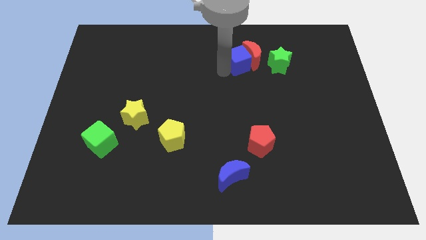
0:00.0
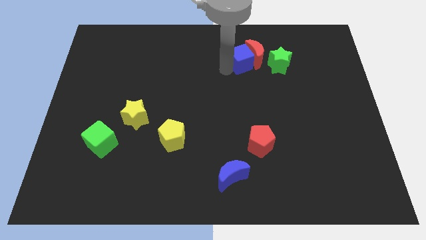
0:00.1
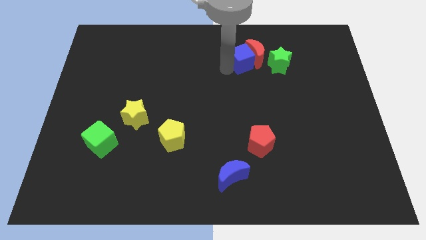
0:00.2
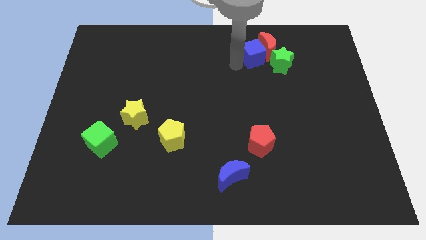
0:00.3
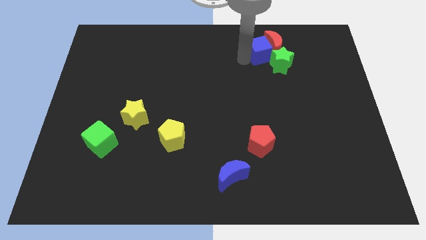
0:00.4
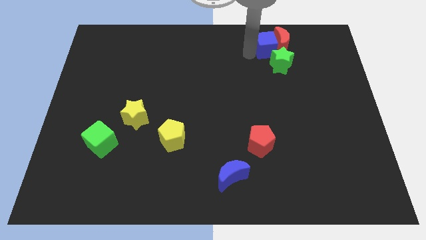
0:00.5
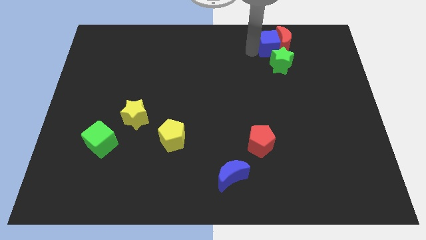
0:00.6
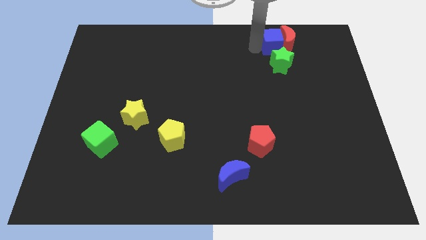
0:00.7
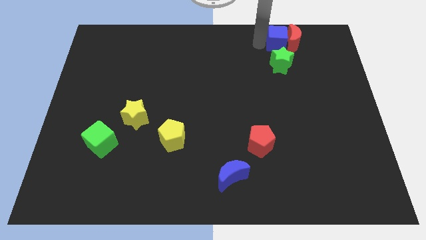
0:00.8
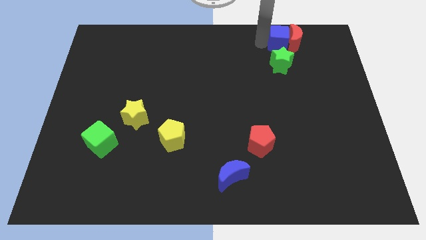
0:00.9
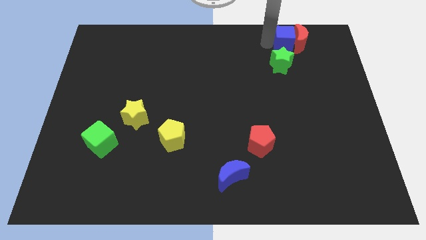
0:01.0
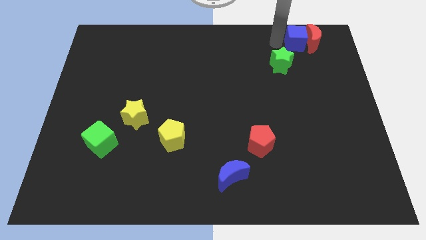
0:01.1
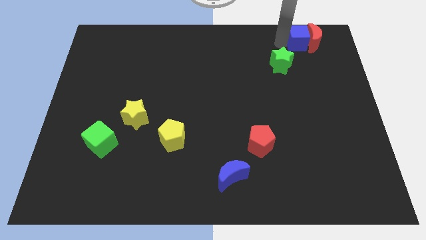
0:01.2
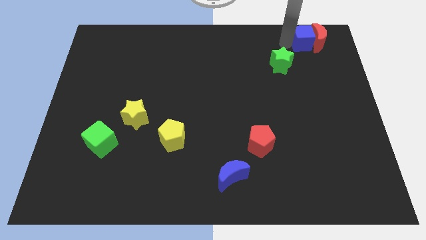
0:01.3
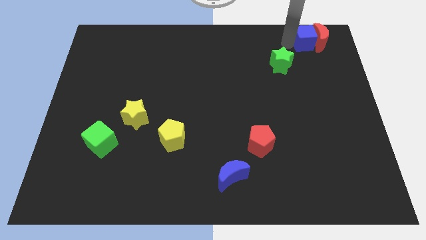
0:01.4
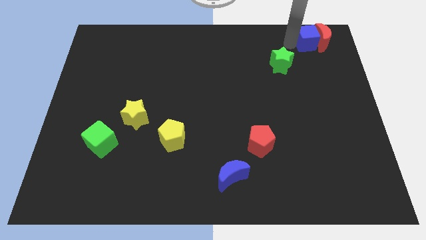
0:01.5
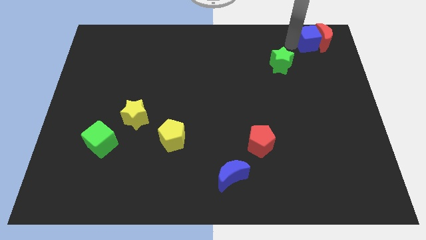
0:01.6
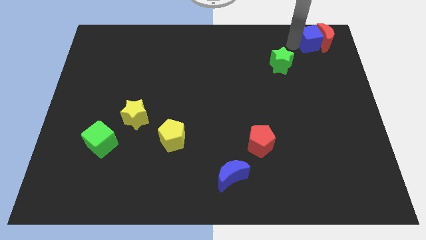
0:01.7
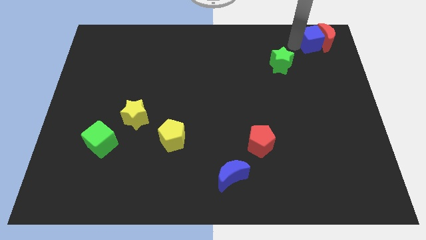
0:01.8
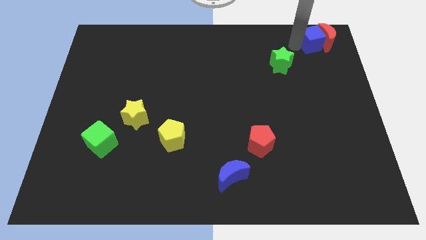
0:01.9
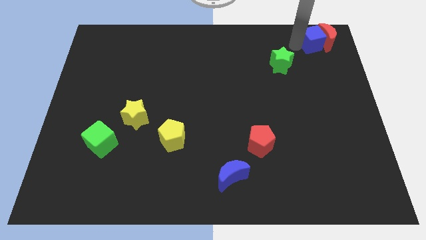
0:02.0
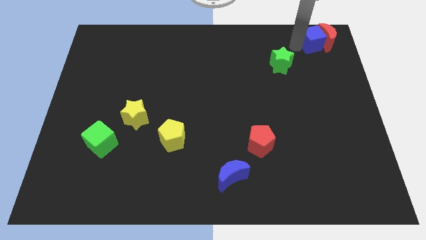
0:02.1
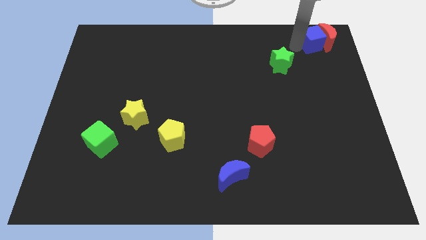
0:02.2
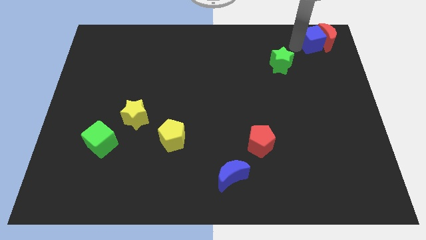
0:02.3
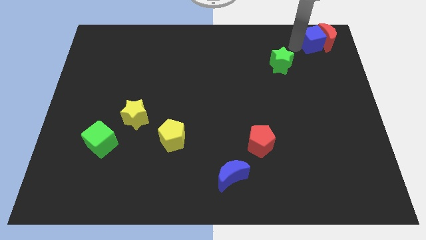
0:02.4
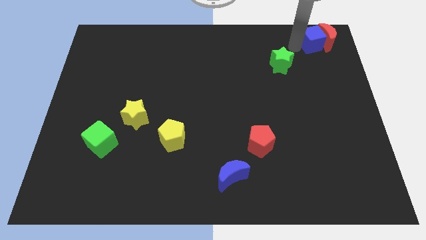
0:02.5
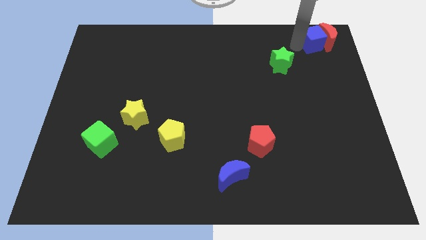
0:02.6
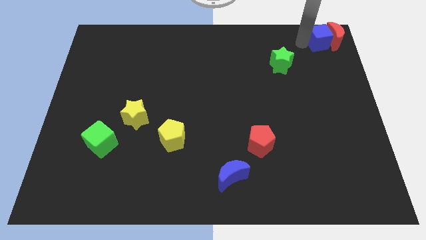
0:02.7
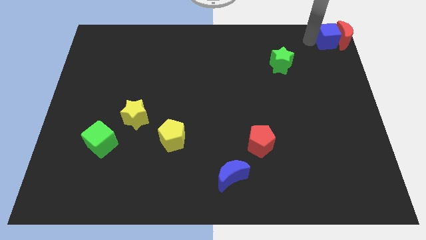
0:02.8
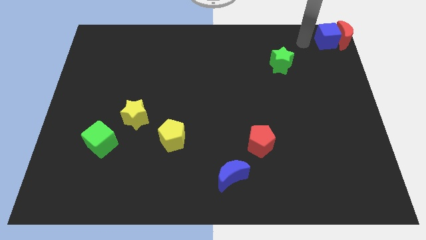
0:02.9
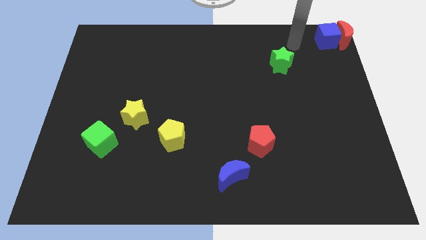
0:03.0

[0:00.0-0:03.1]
put the blue cube with the red crescent at the top right corner of the board

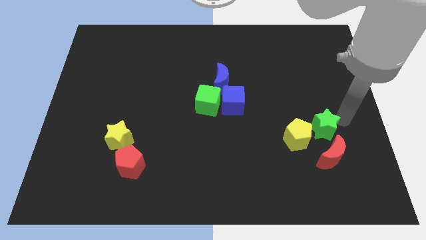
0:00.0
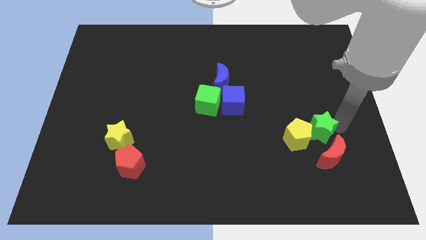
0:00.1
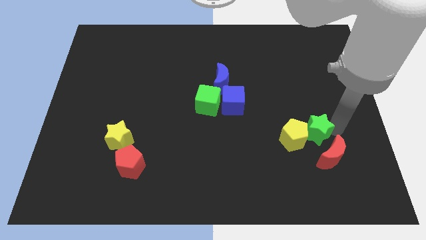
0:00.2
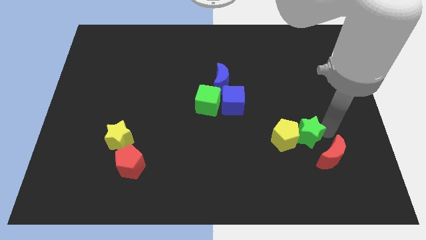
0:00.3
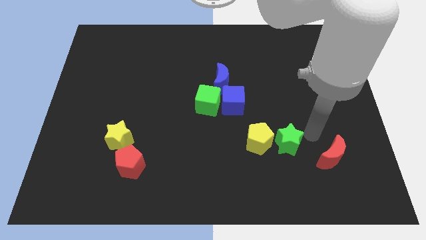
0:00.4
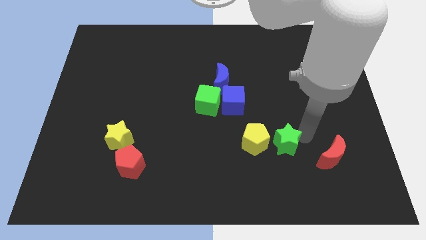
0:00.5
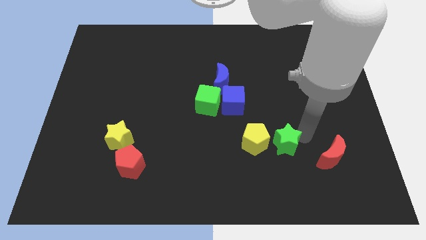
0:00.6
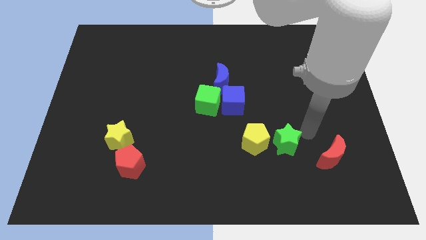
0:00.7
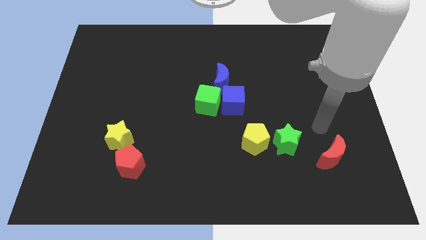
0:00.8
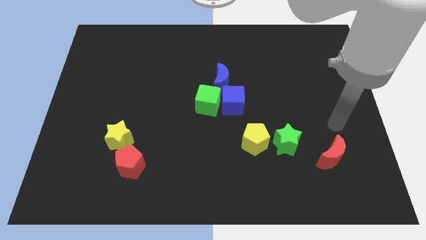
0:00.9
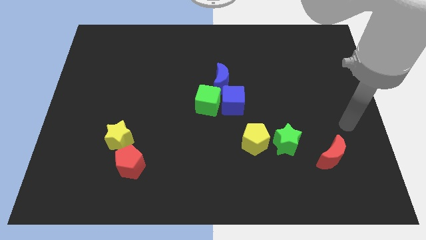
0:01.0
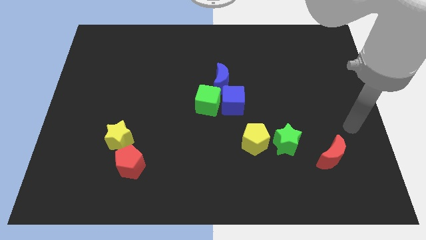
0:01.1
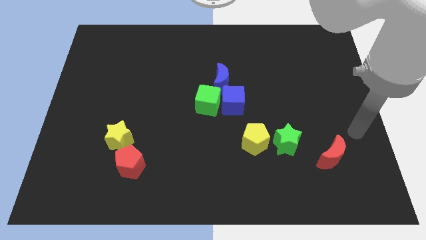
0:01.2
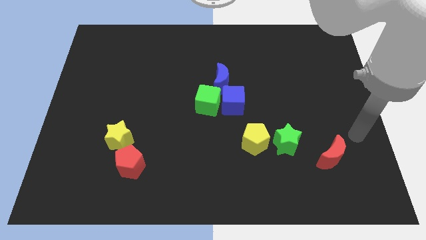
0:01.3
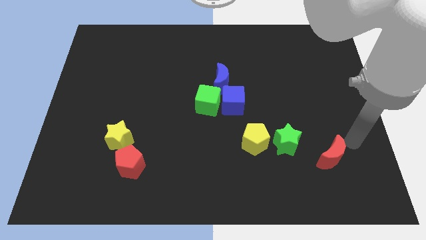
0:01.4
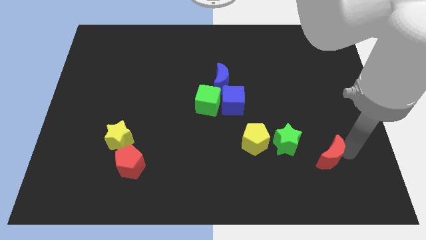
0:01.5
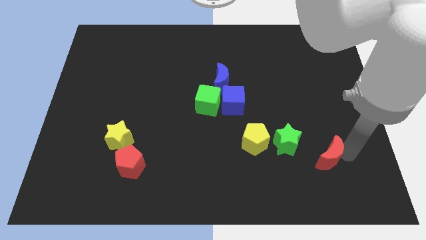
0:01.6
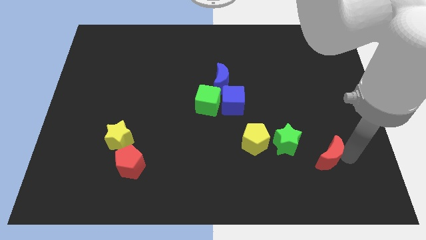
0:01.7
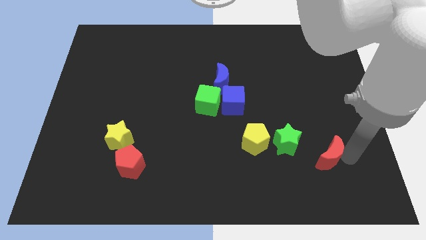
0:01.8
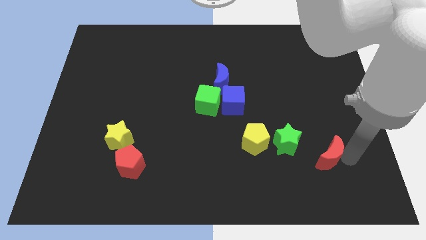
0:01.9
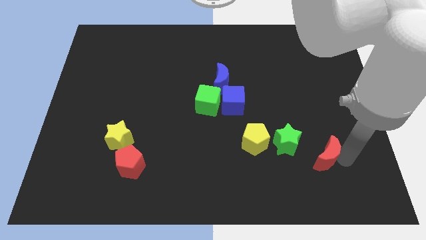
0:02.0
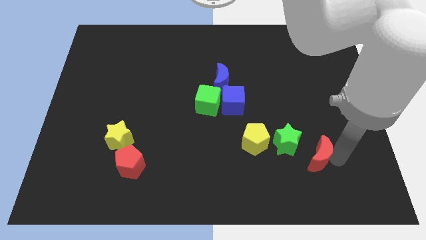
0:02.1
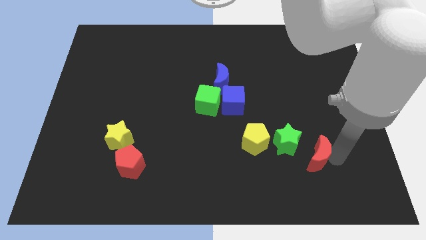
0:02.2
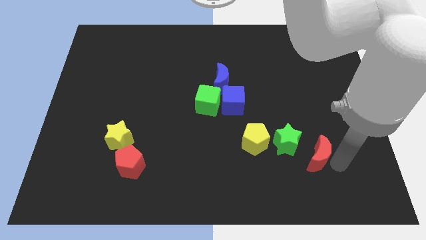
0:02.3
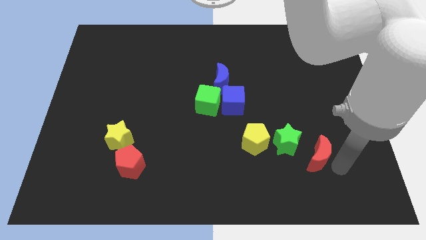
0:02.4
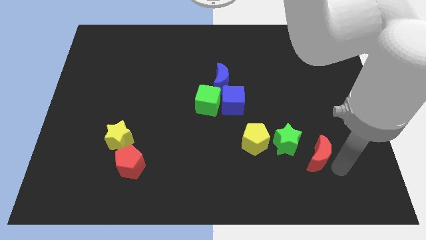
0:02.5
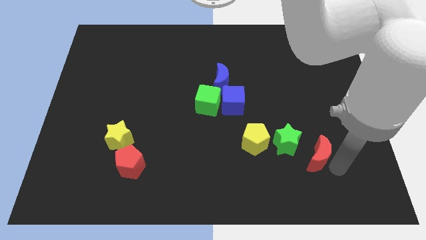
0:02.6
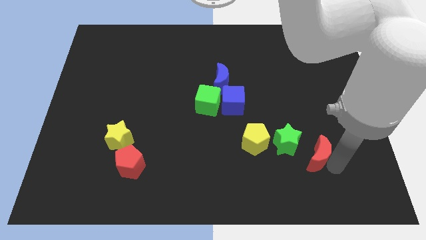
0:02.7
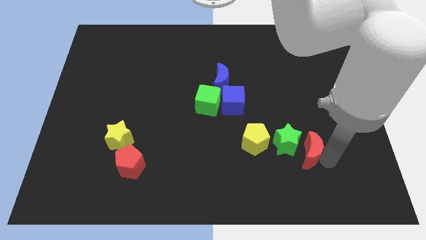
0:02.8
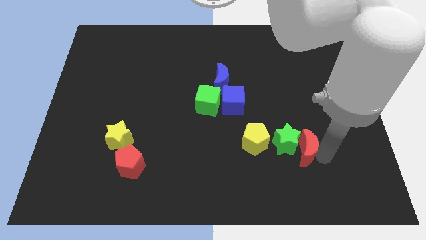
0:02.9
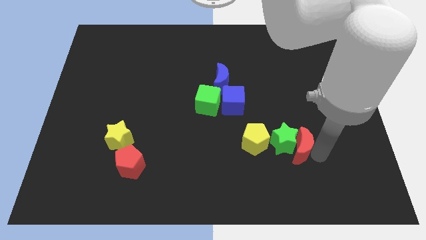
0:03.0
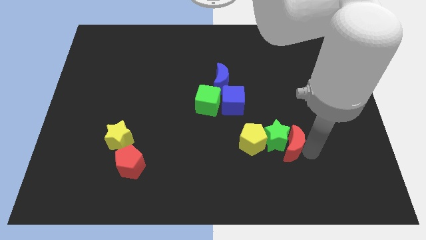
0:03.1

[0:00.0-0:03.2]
place the green star in between the yellow pentagon and the red moon

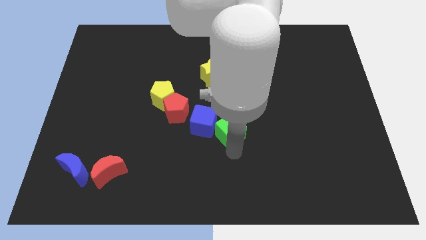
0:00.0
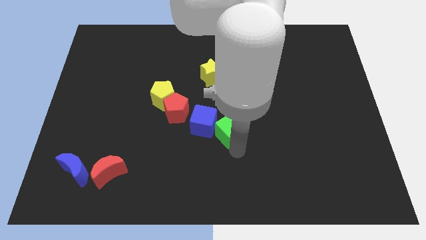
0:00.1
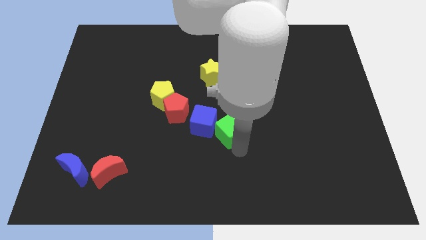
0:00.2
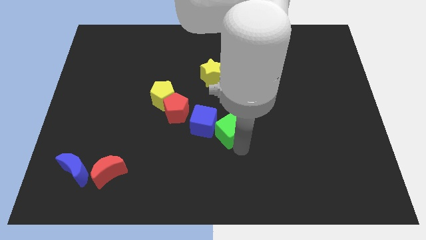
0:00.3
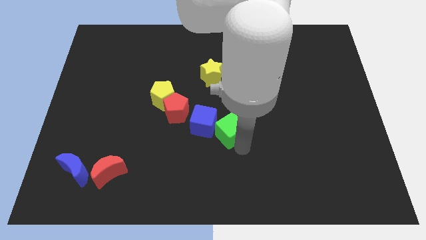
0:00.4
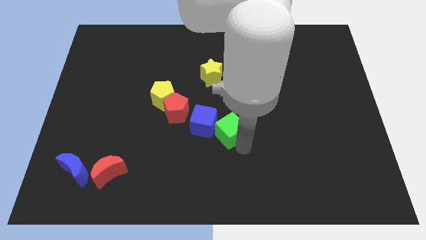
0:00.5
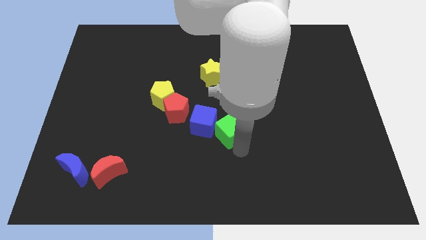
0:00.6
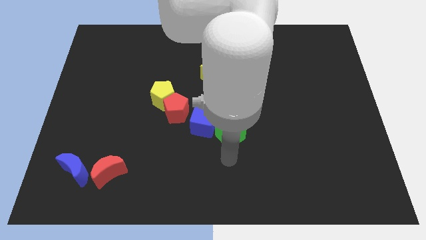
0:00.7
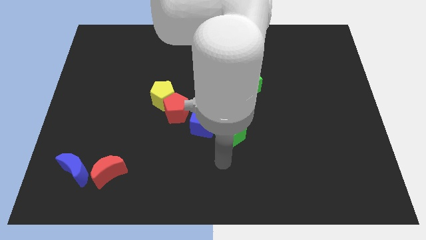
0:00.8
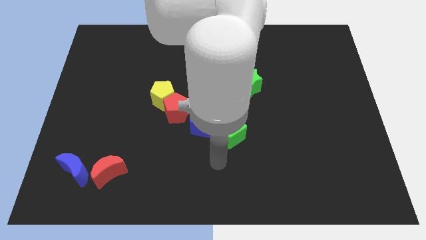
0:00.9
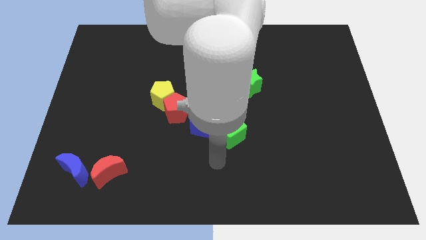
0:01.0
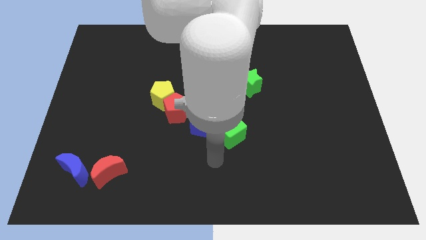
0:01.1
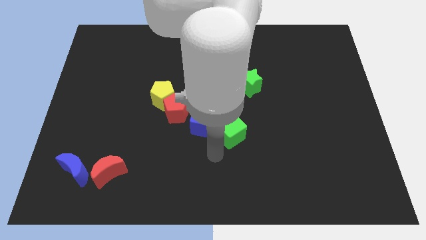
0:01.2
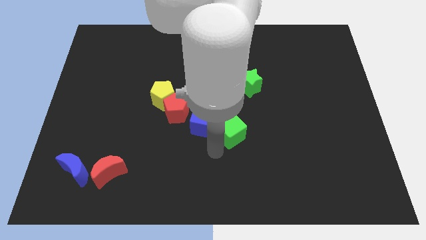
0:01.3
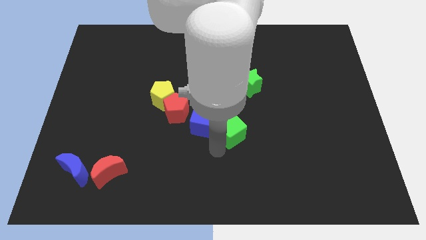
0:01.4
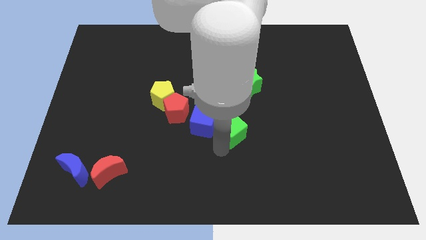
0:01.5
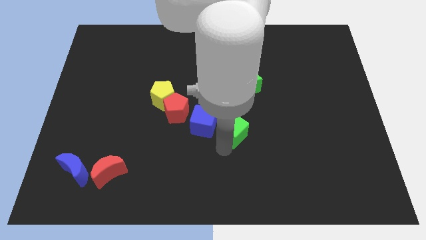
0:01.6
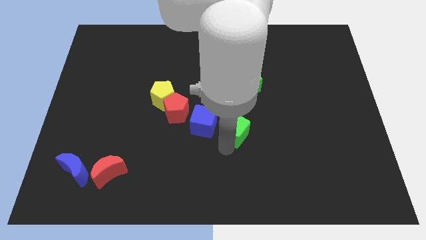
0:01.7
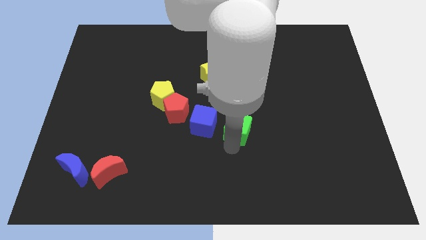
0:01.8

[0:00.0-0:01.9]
slightly push the green cube

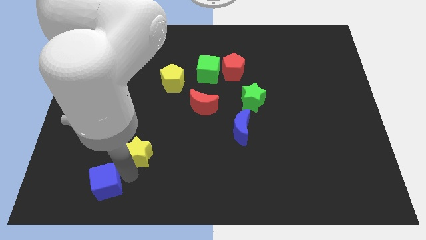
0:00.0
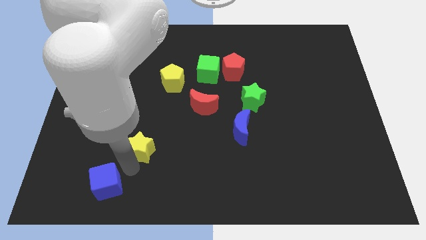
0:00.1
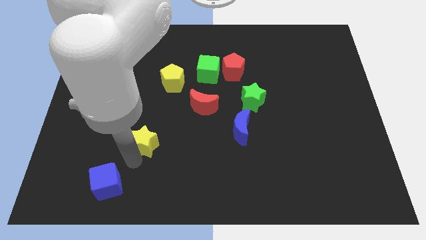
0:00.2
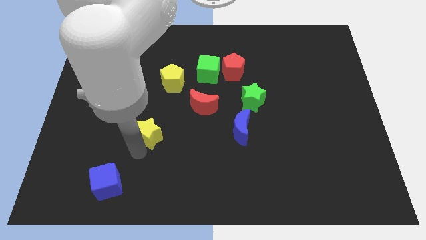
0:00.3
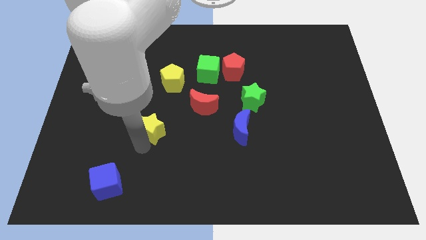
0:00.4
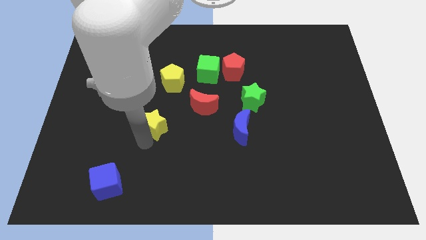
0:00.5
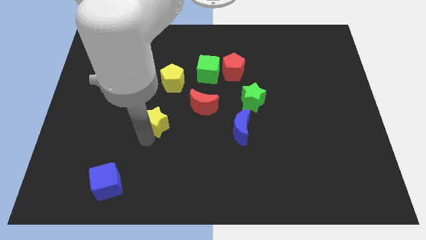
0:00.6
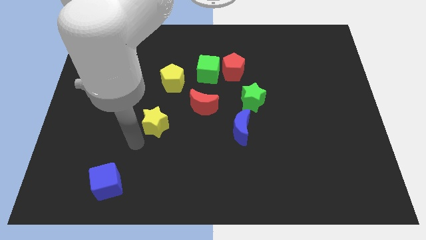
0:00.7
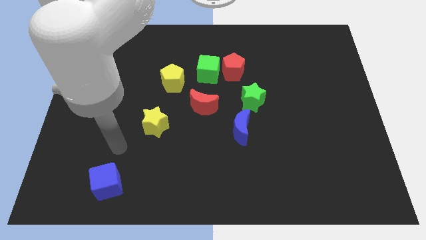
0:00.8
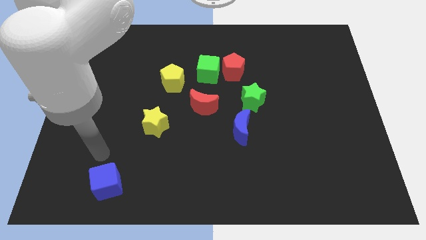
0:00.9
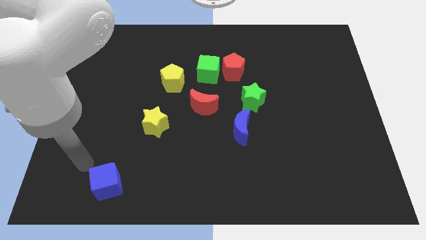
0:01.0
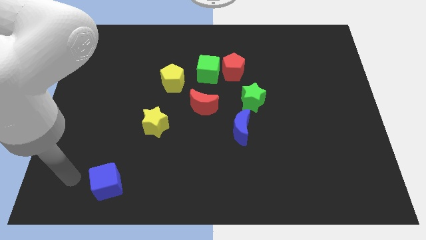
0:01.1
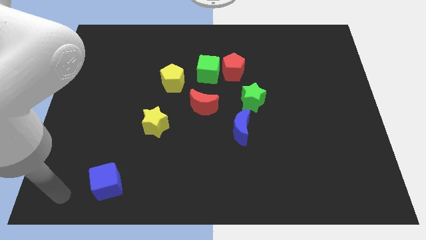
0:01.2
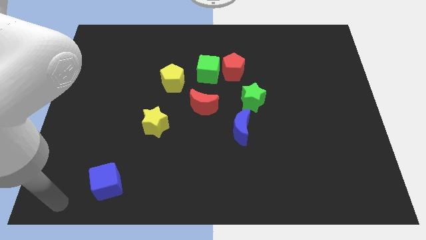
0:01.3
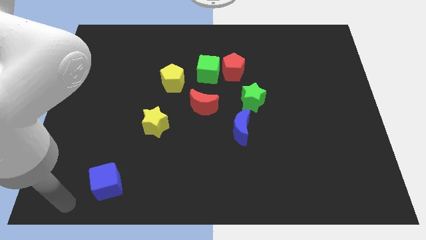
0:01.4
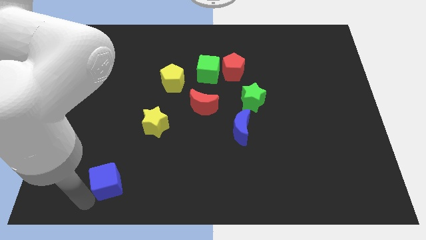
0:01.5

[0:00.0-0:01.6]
slide the yellow star towards the bottom left side of the red moon
